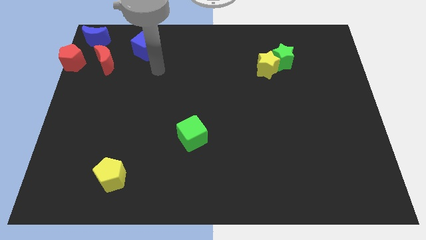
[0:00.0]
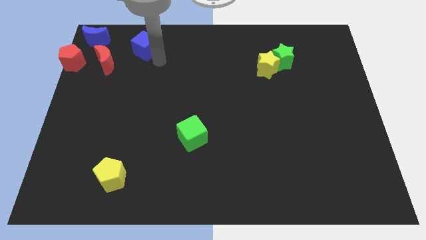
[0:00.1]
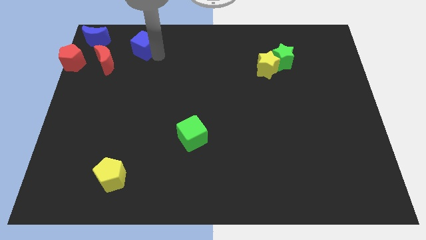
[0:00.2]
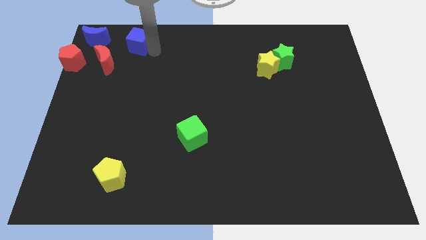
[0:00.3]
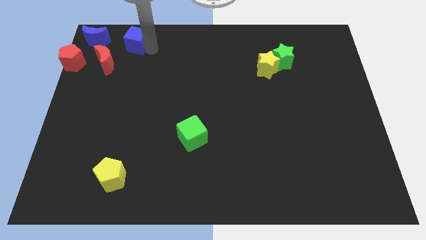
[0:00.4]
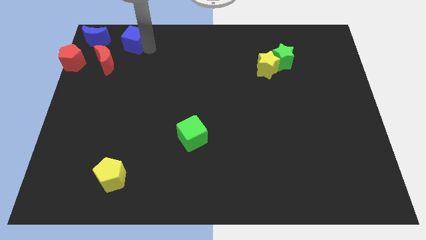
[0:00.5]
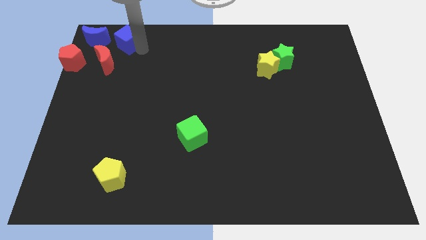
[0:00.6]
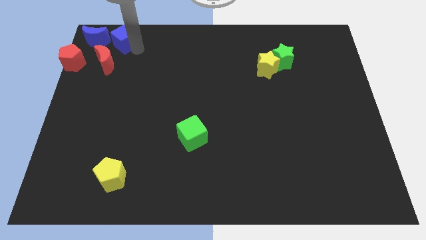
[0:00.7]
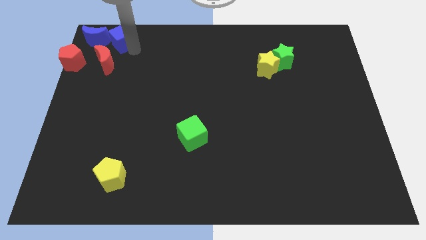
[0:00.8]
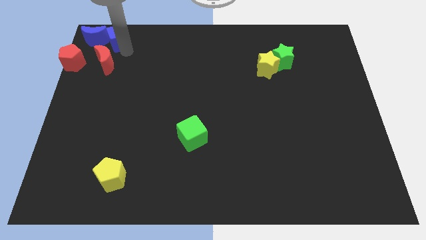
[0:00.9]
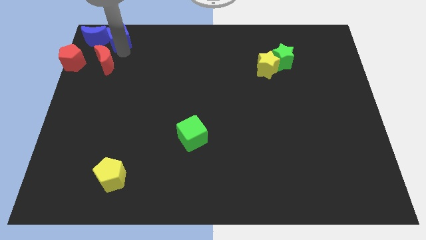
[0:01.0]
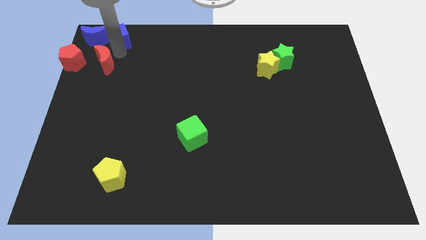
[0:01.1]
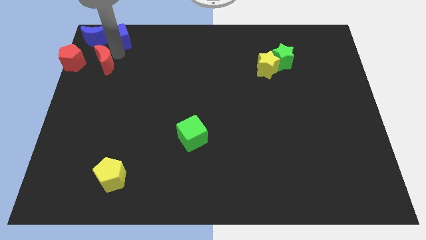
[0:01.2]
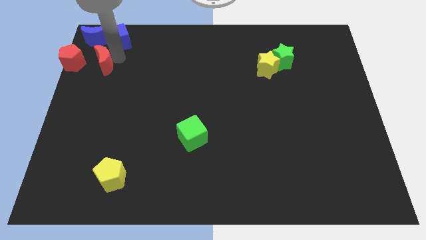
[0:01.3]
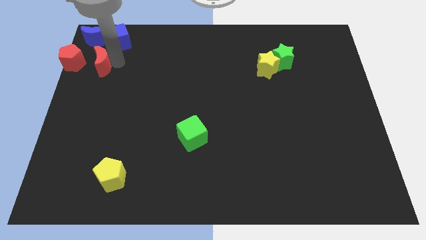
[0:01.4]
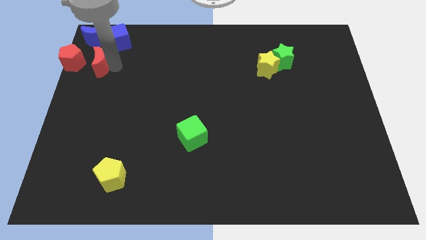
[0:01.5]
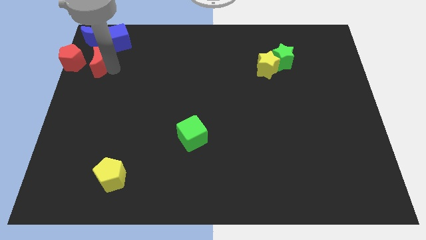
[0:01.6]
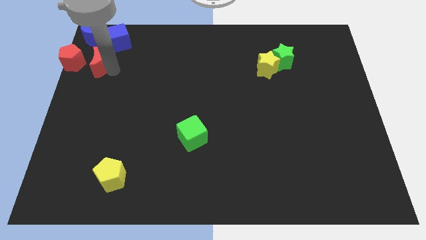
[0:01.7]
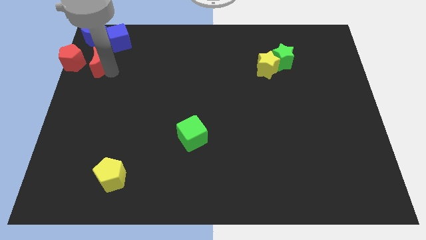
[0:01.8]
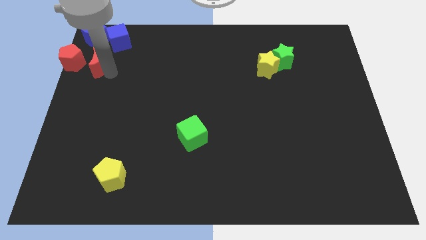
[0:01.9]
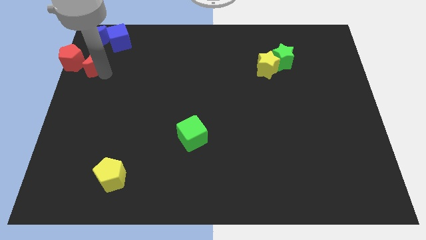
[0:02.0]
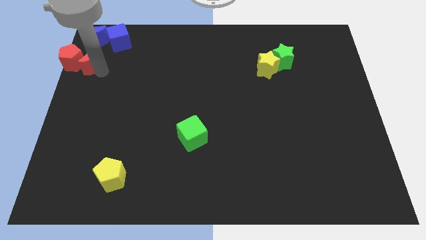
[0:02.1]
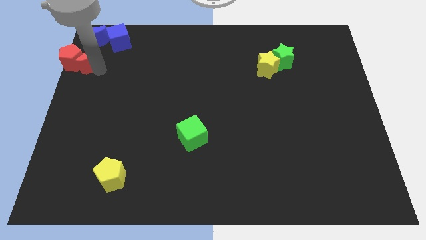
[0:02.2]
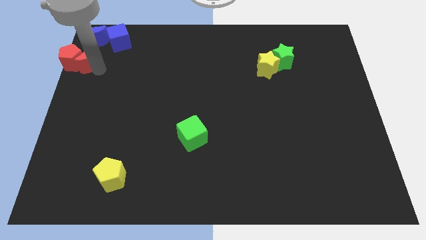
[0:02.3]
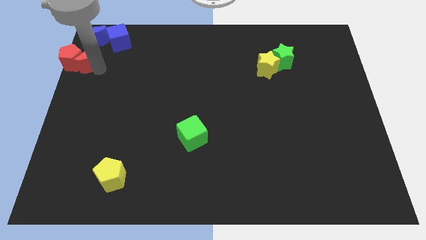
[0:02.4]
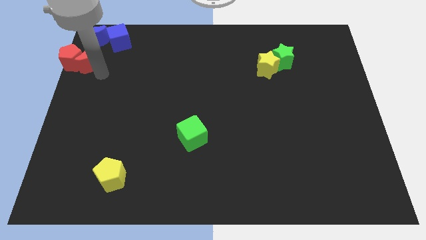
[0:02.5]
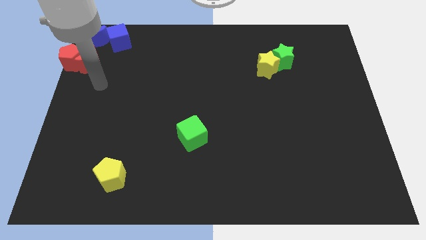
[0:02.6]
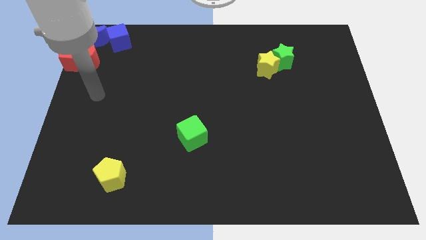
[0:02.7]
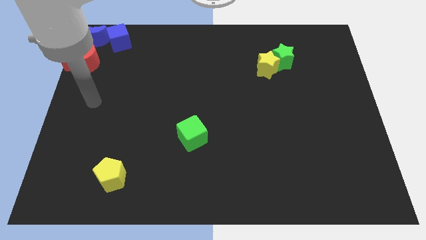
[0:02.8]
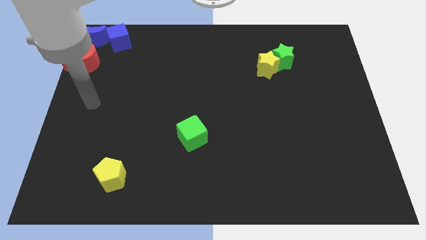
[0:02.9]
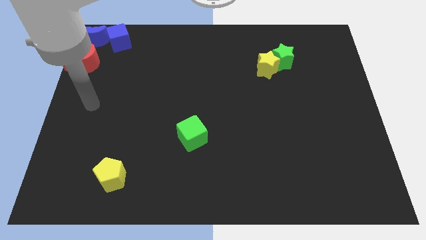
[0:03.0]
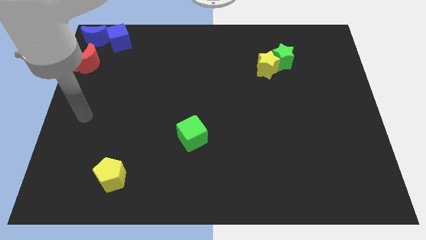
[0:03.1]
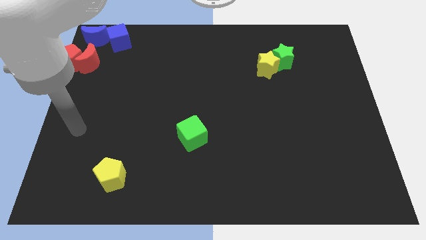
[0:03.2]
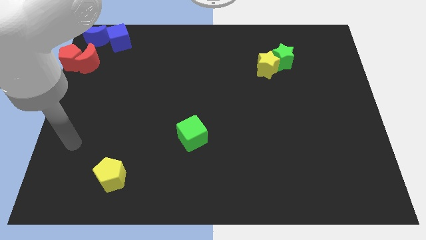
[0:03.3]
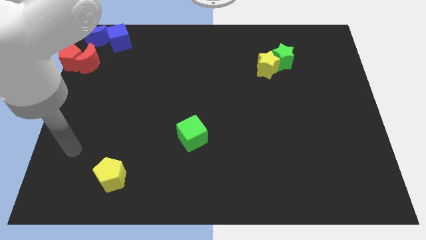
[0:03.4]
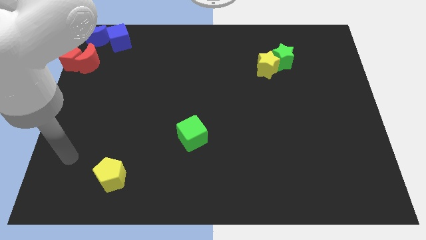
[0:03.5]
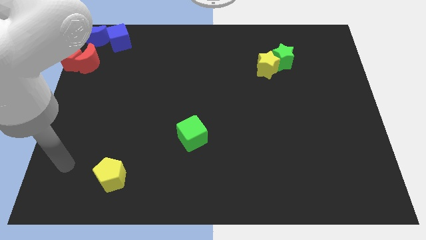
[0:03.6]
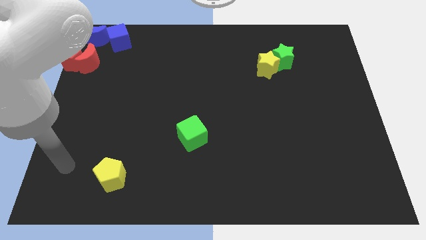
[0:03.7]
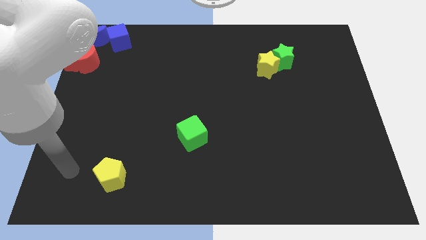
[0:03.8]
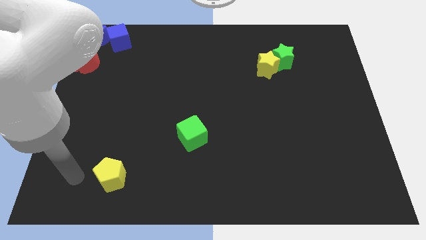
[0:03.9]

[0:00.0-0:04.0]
slide blue cube and red moon in the top left corner

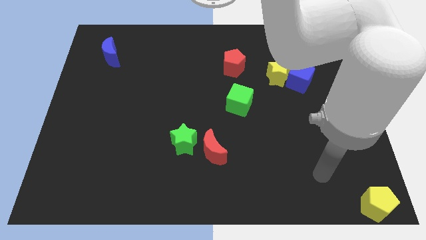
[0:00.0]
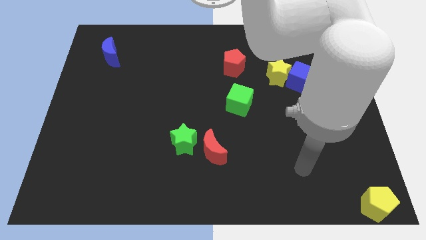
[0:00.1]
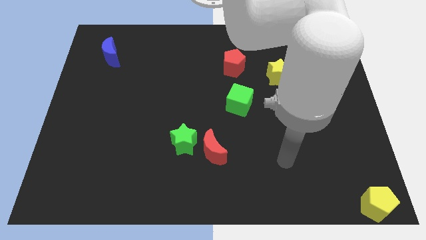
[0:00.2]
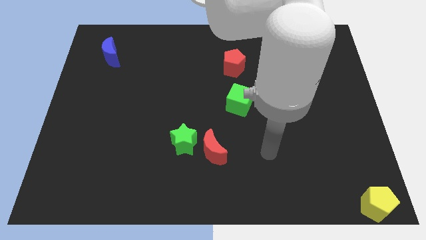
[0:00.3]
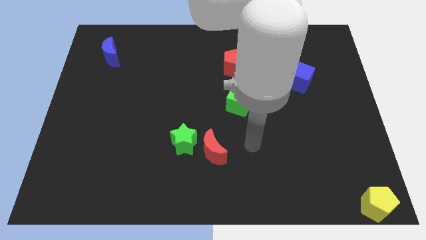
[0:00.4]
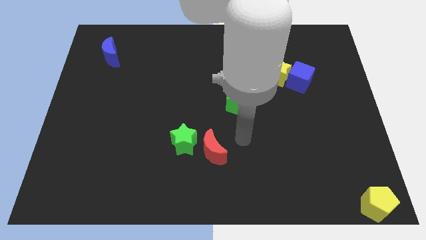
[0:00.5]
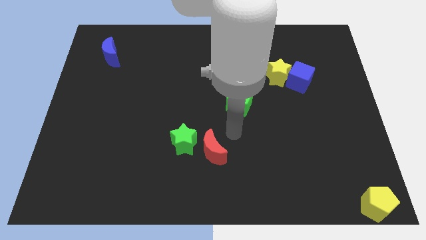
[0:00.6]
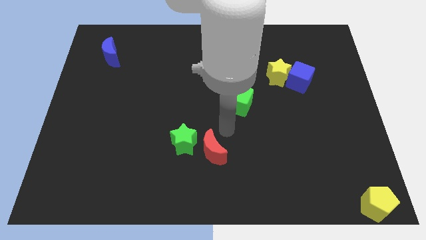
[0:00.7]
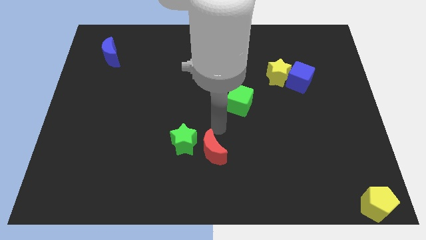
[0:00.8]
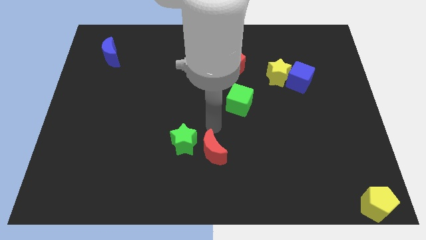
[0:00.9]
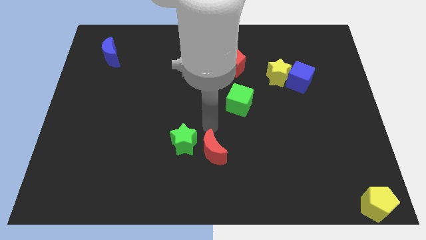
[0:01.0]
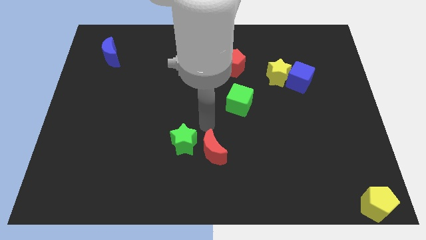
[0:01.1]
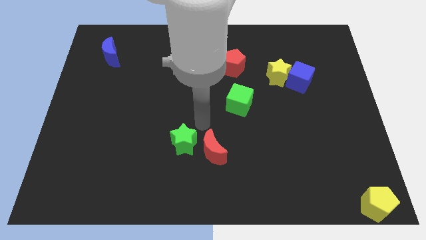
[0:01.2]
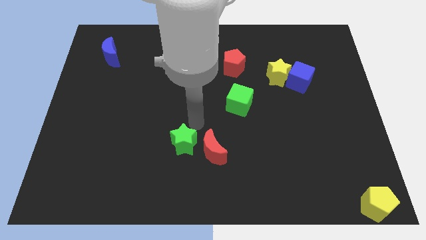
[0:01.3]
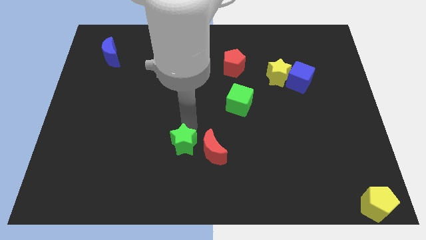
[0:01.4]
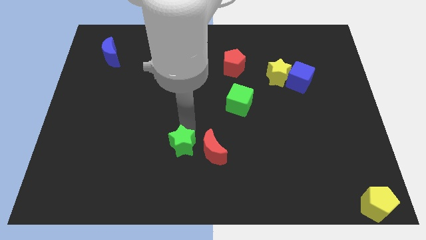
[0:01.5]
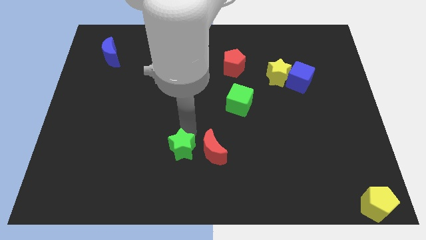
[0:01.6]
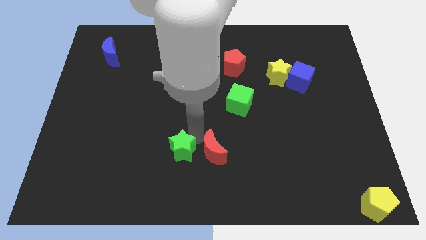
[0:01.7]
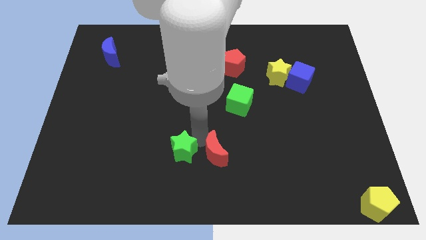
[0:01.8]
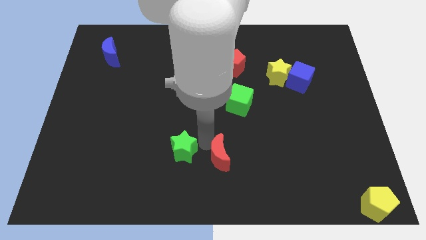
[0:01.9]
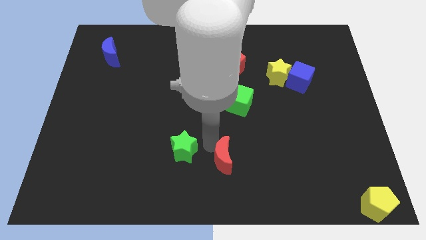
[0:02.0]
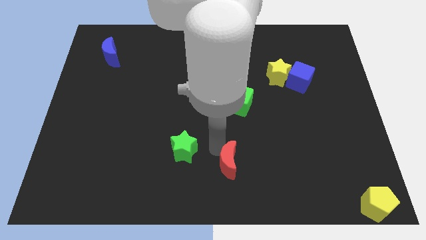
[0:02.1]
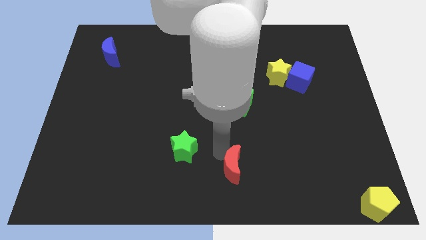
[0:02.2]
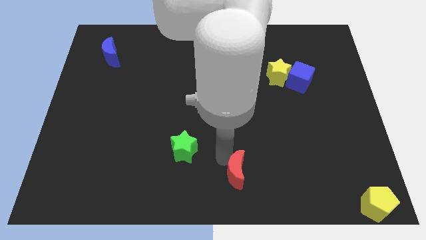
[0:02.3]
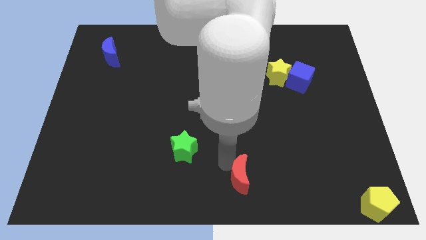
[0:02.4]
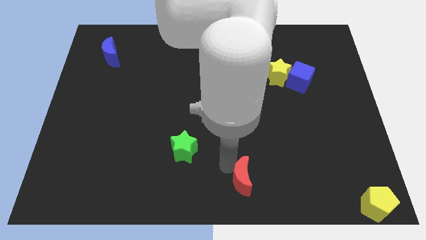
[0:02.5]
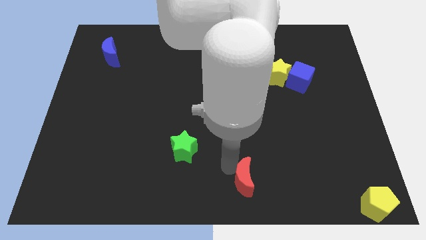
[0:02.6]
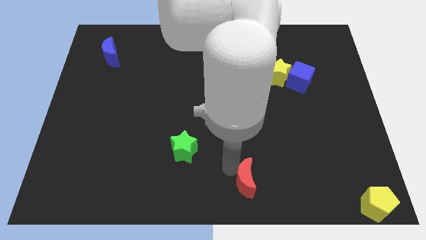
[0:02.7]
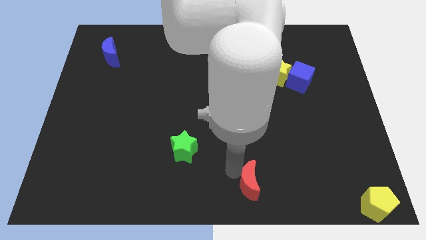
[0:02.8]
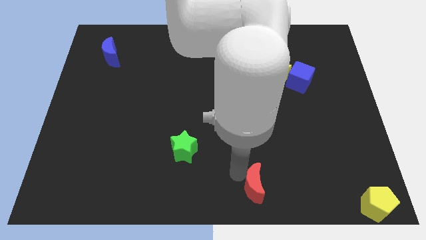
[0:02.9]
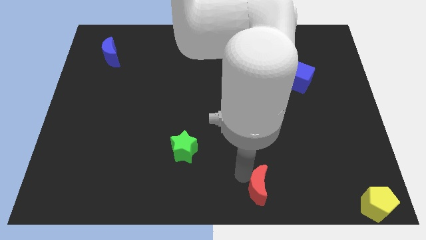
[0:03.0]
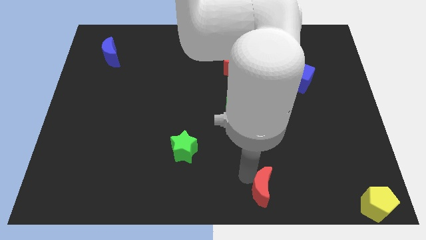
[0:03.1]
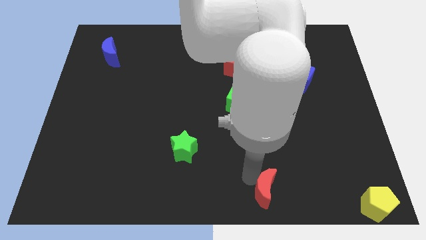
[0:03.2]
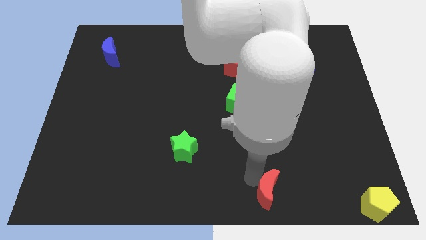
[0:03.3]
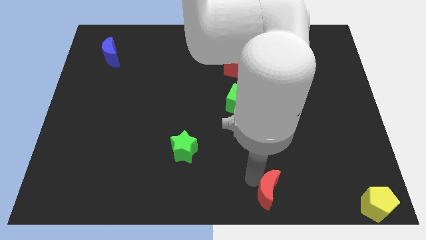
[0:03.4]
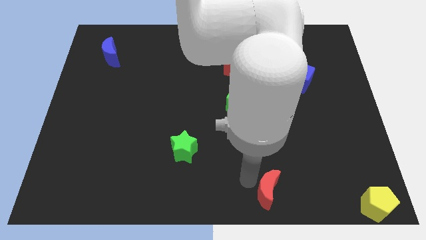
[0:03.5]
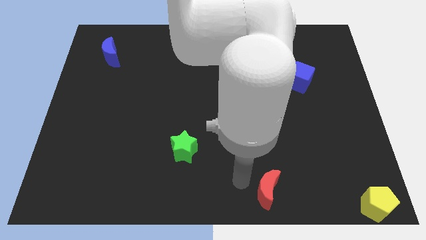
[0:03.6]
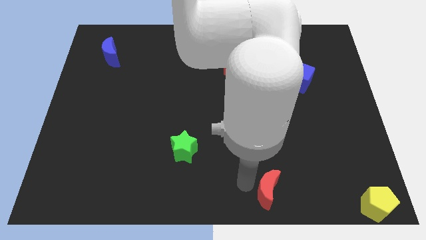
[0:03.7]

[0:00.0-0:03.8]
move the red crescent towards the yellow pentagon

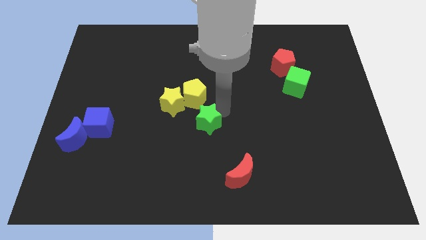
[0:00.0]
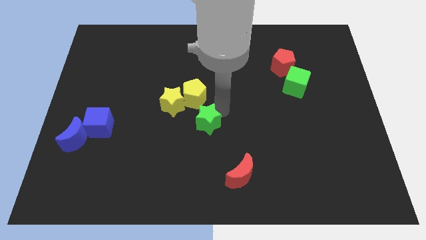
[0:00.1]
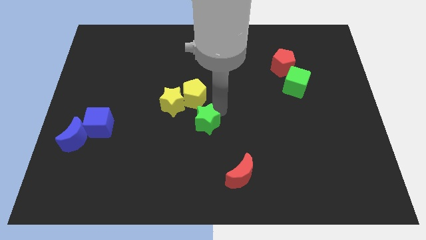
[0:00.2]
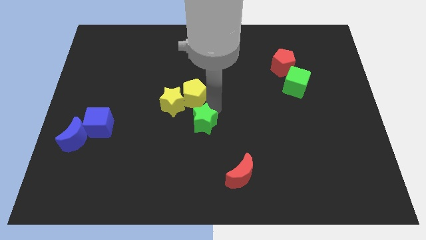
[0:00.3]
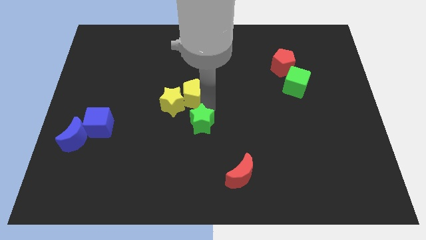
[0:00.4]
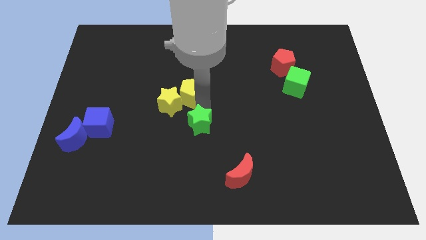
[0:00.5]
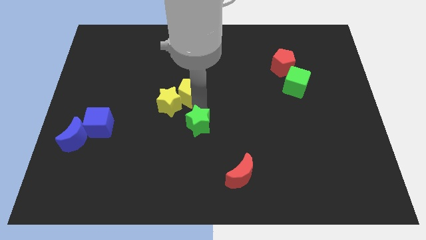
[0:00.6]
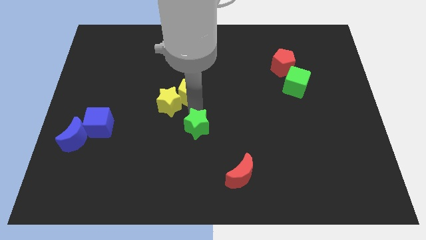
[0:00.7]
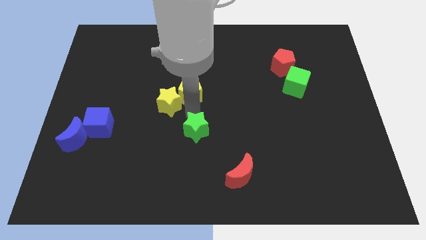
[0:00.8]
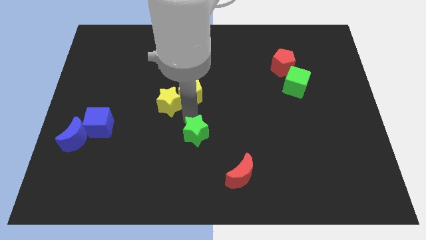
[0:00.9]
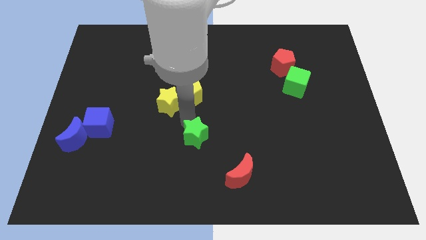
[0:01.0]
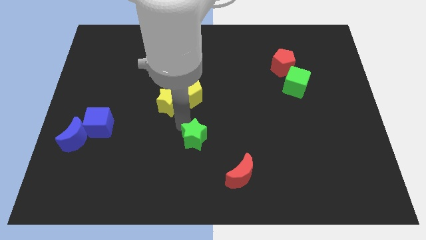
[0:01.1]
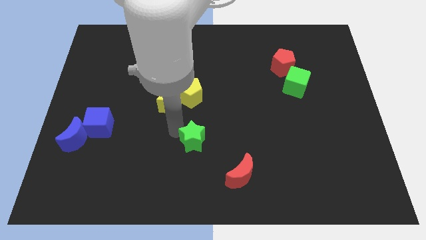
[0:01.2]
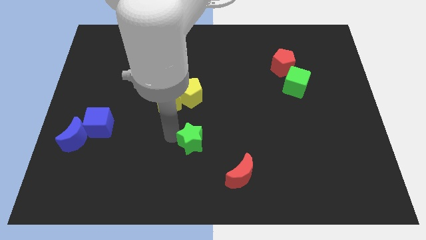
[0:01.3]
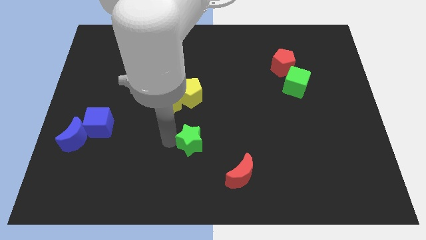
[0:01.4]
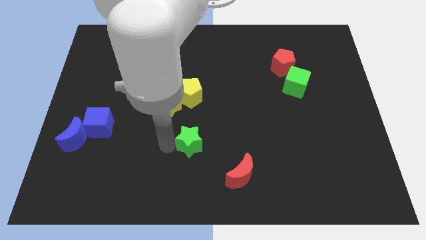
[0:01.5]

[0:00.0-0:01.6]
place the green star below the yellow blocks
